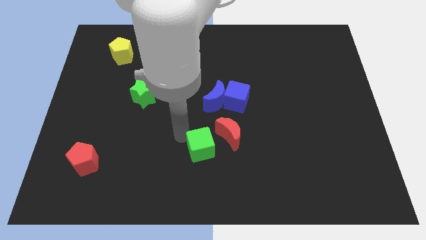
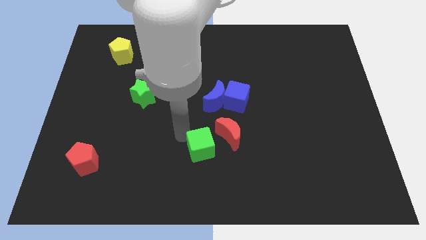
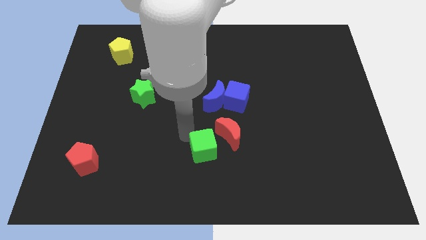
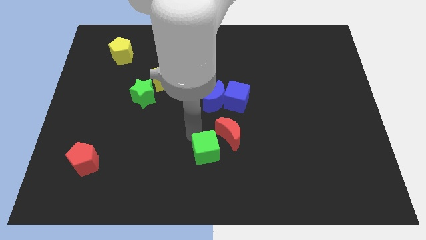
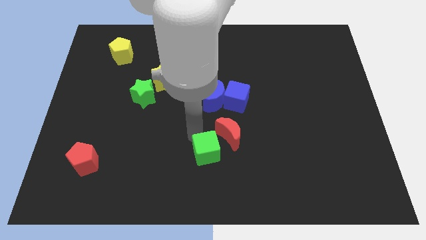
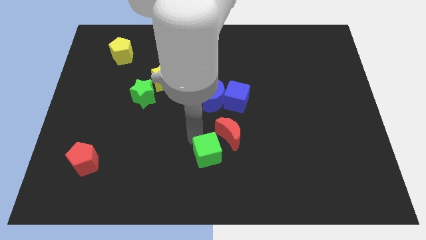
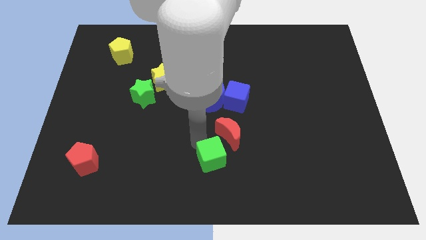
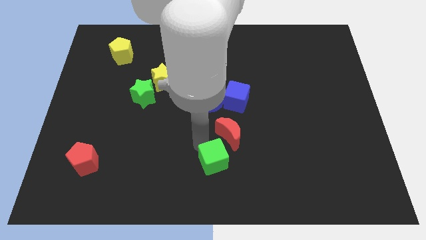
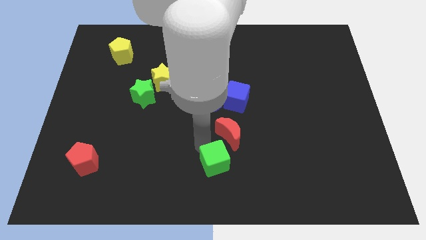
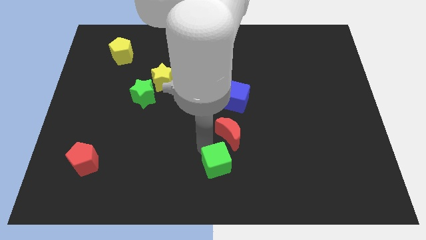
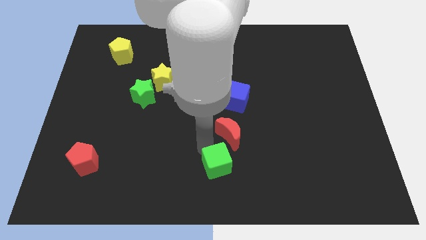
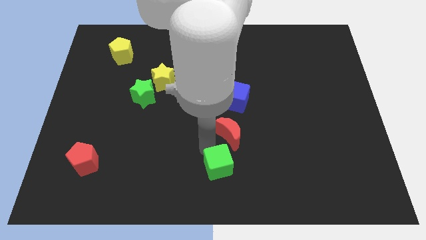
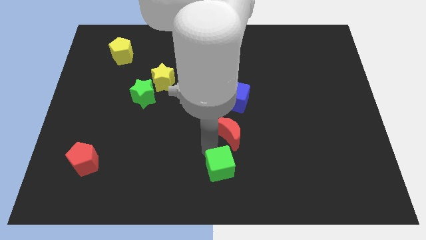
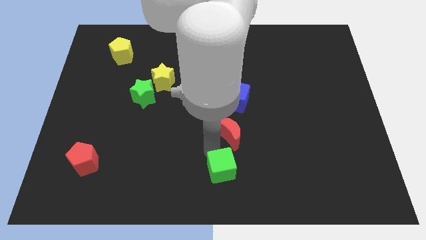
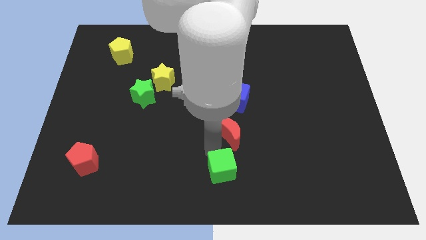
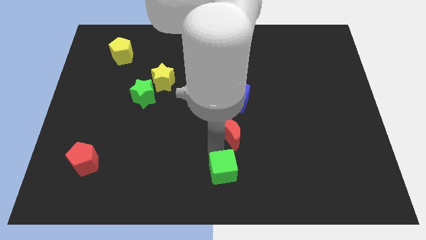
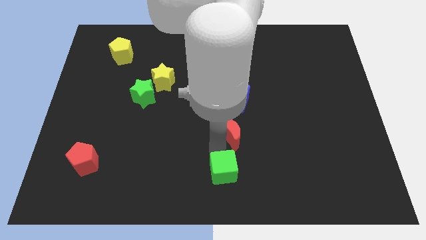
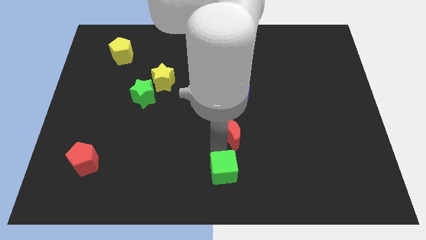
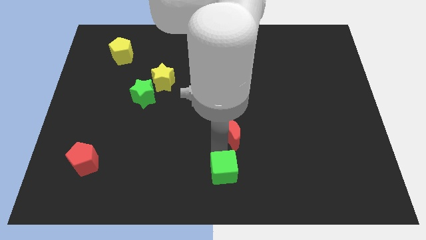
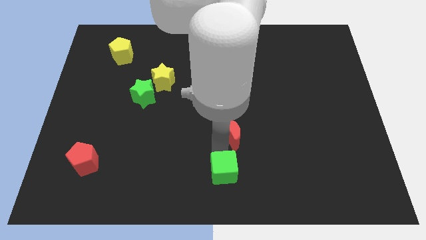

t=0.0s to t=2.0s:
move the green cube to the bottom side of the red moon

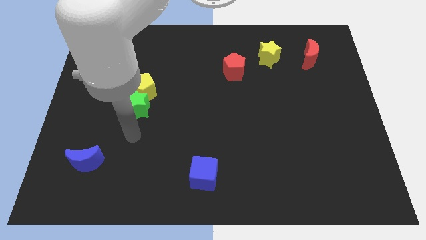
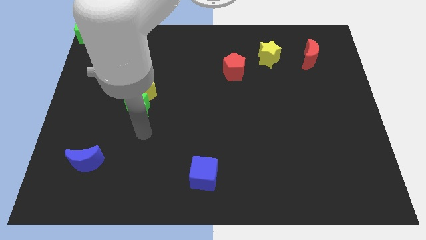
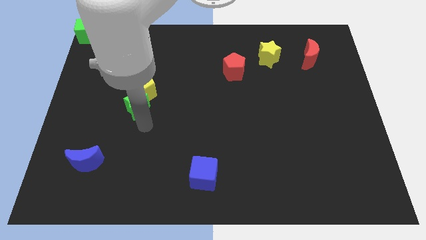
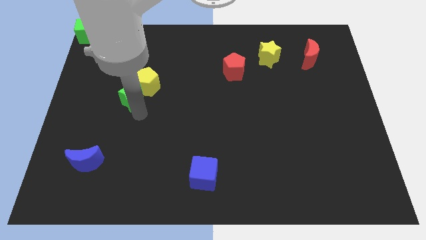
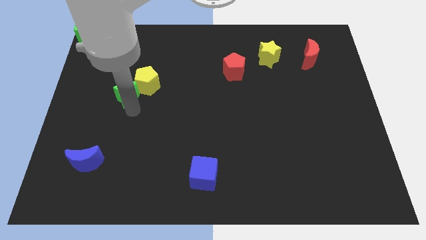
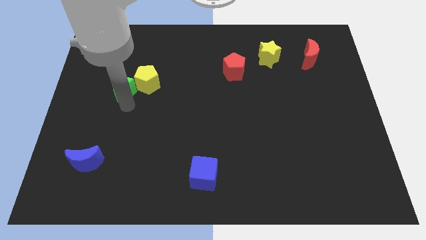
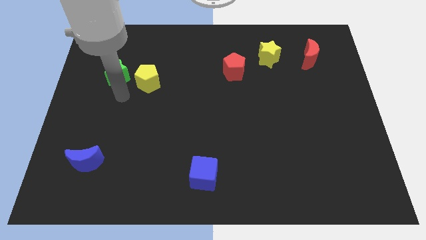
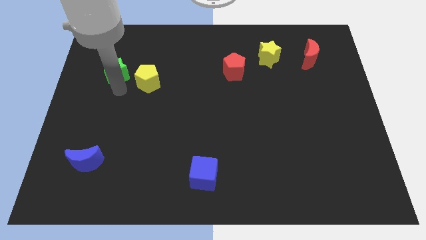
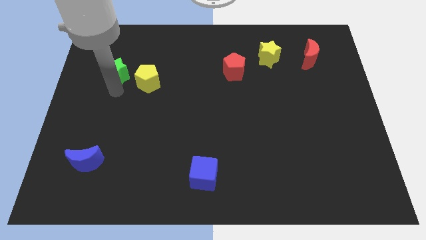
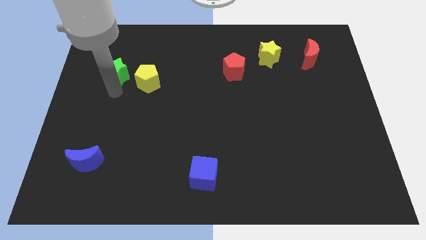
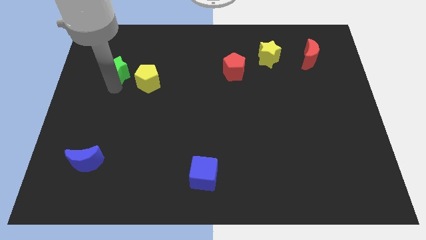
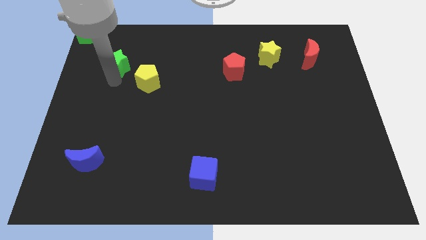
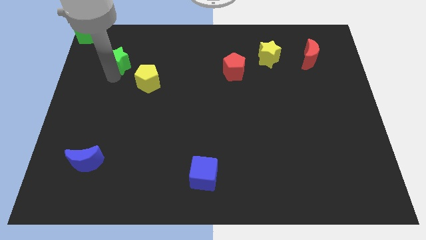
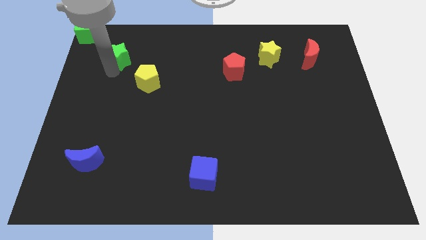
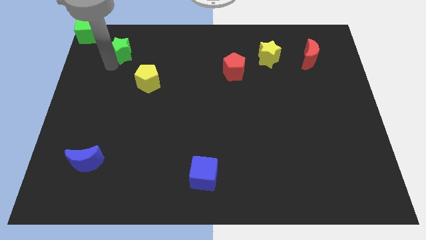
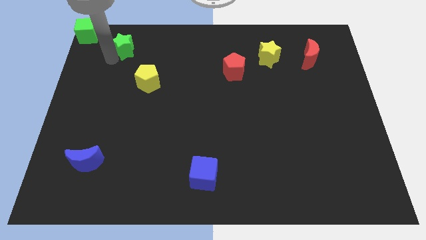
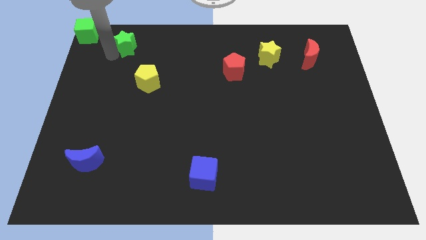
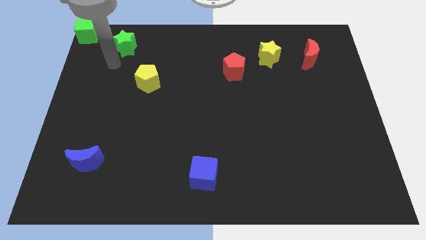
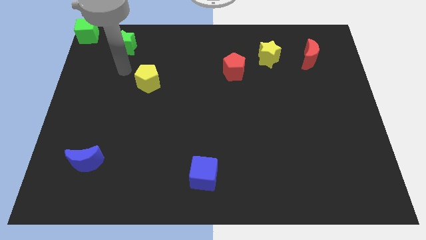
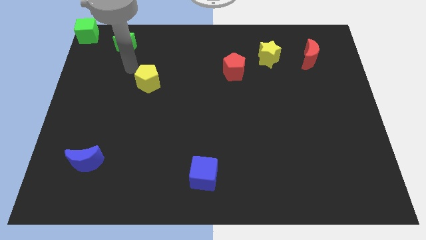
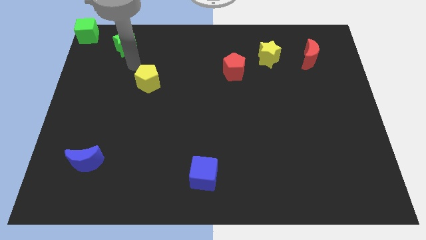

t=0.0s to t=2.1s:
separate green star and yellow pentagon

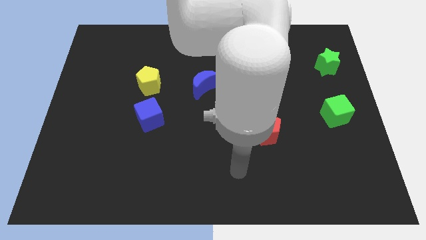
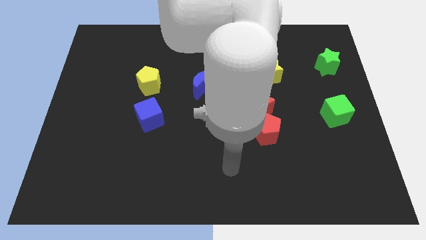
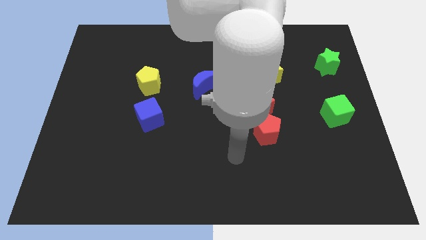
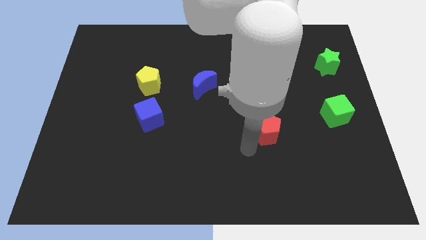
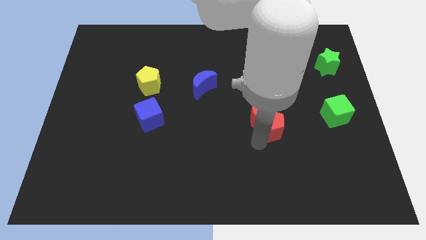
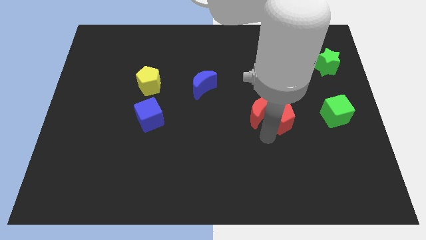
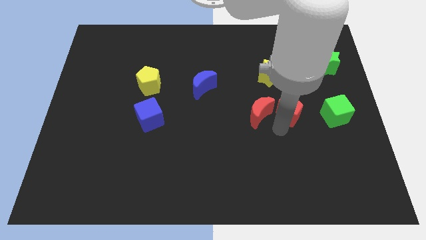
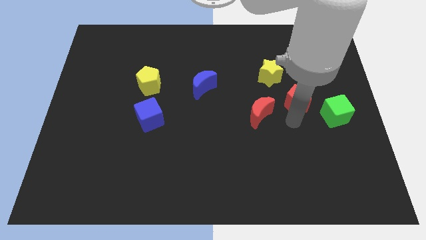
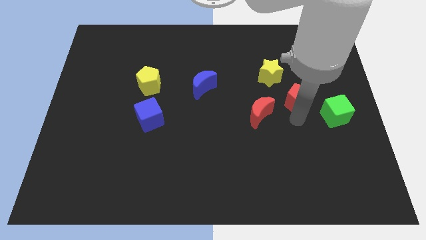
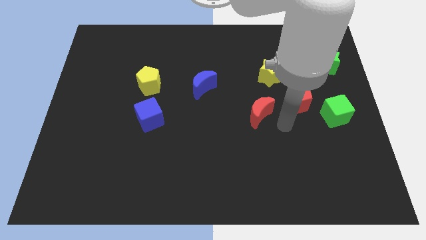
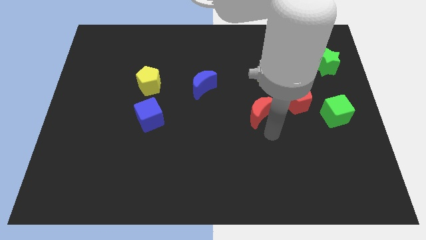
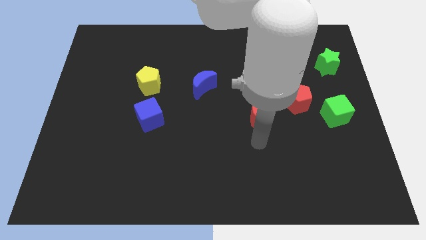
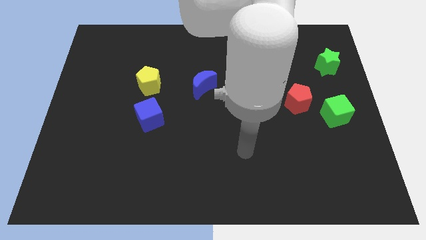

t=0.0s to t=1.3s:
place the red pentagon in between yellow star and green cube

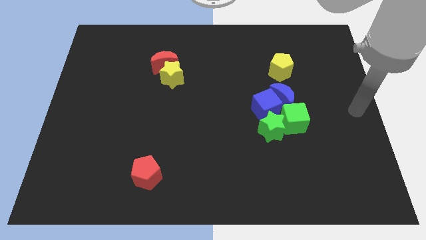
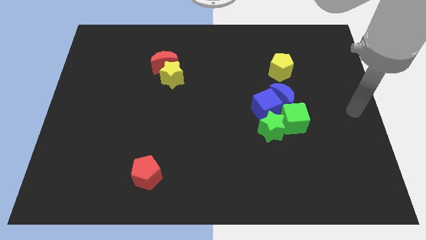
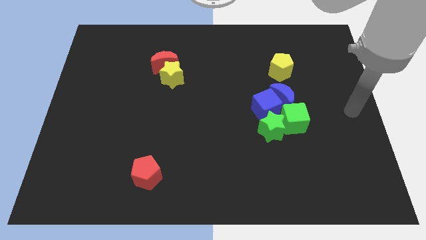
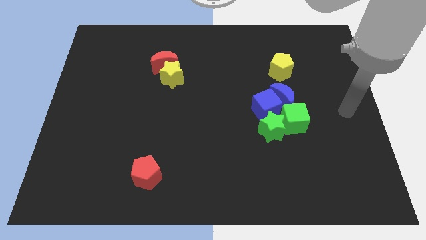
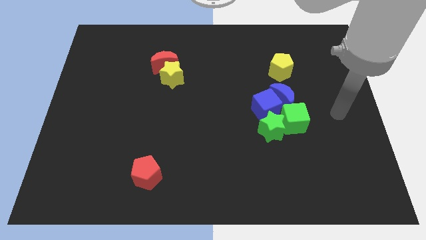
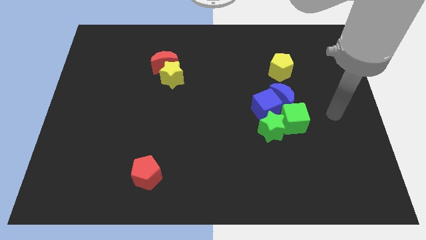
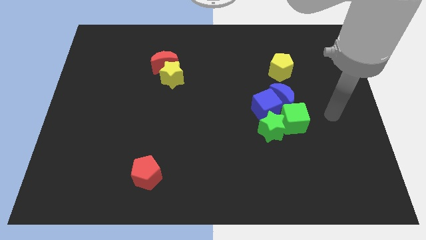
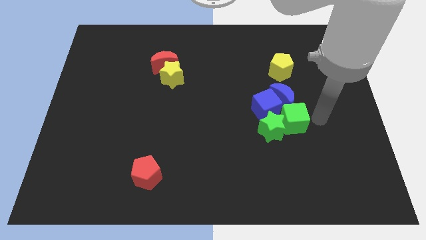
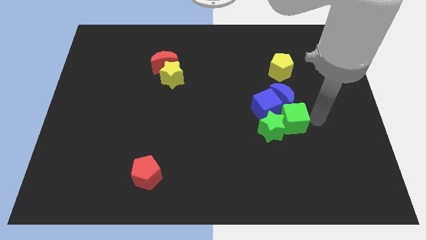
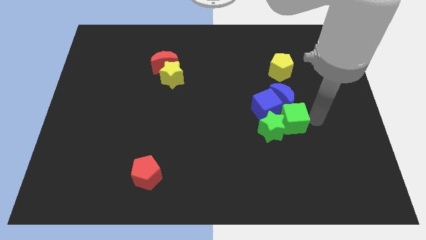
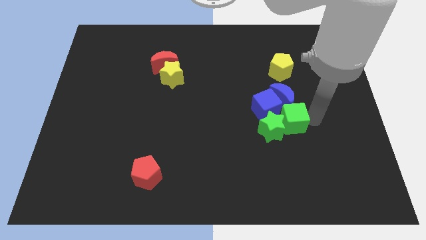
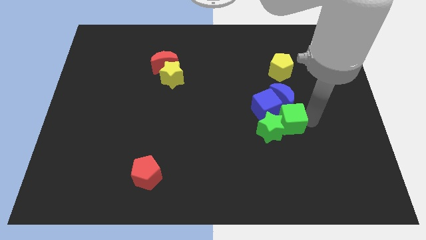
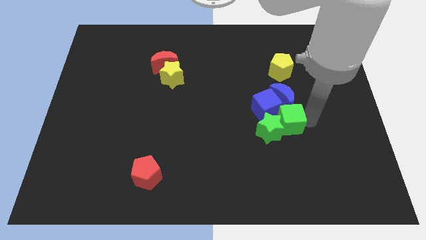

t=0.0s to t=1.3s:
tap the right side of the green cube

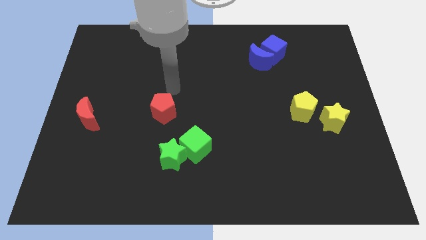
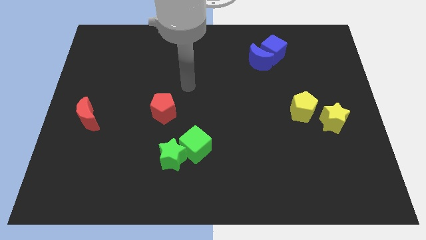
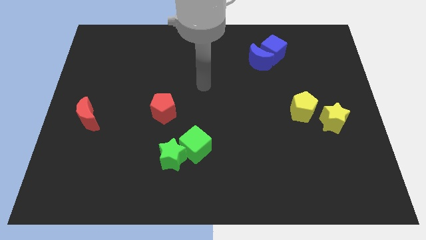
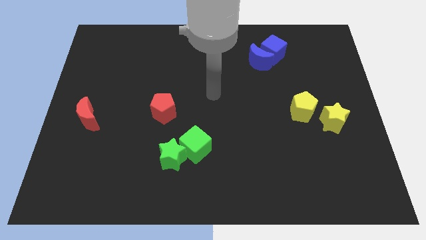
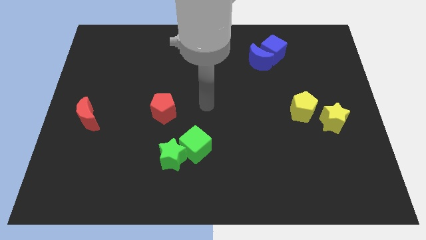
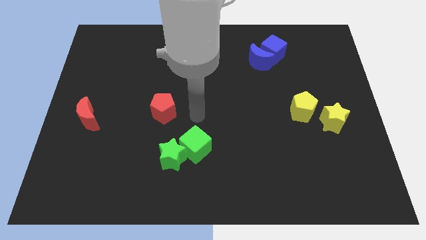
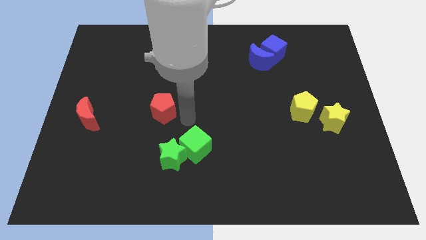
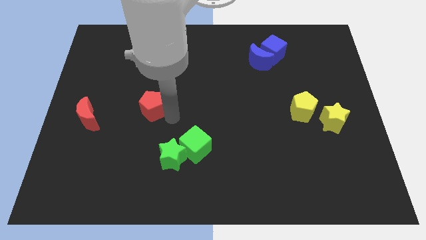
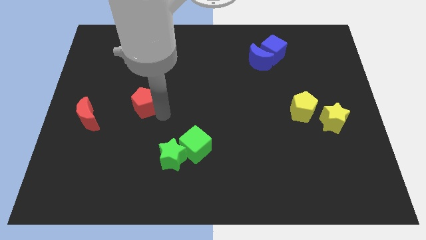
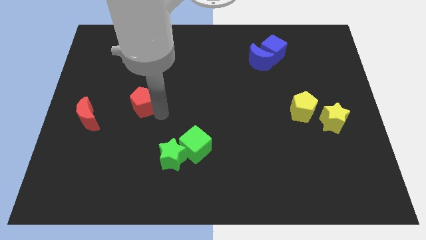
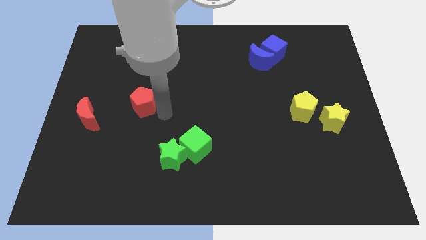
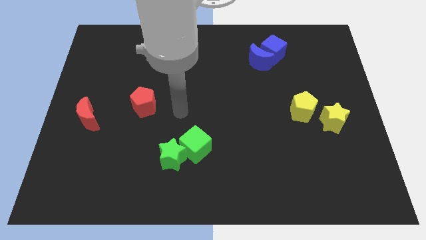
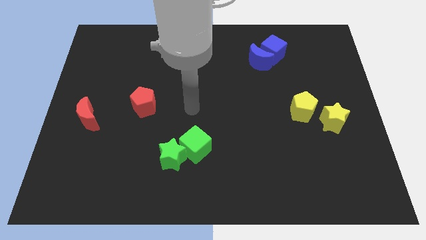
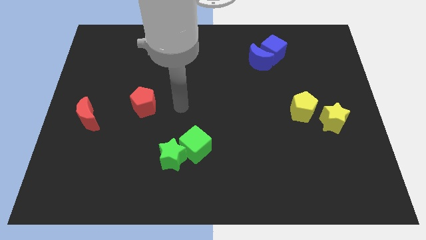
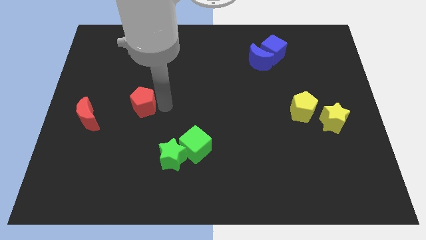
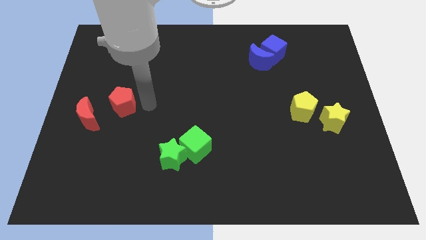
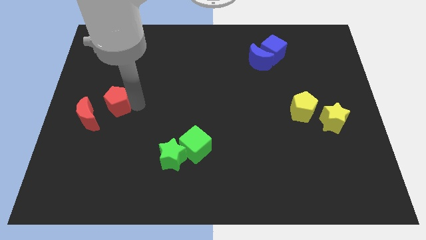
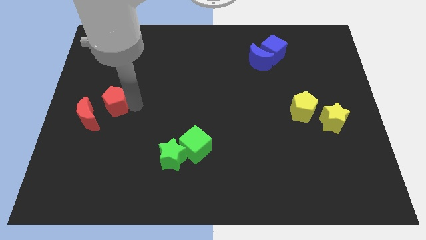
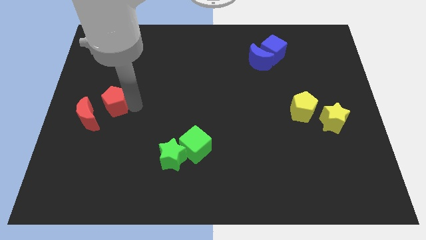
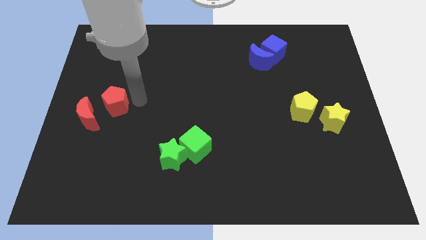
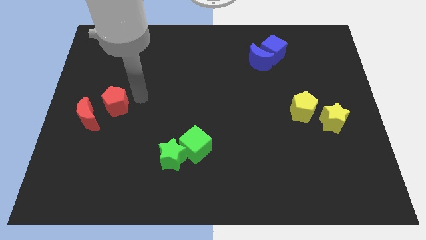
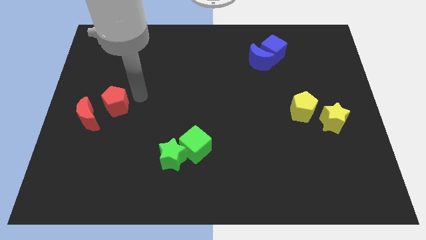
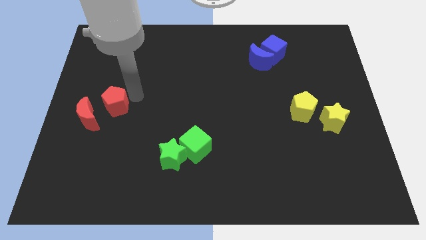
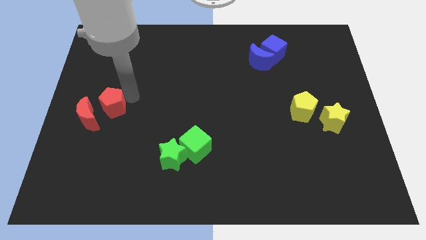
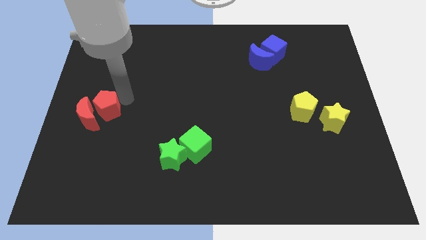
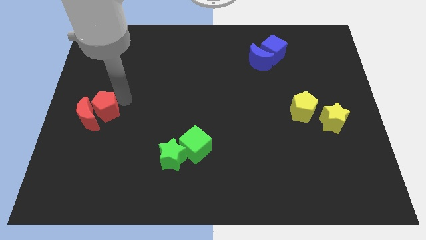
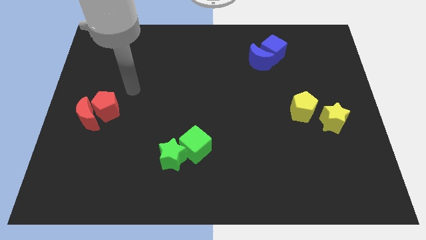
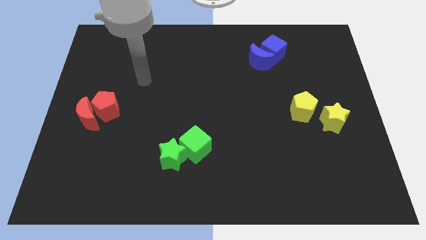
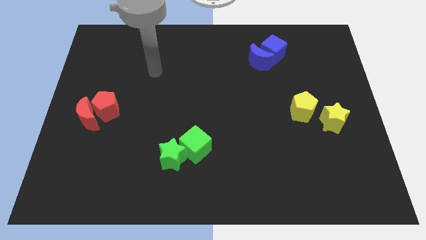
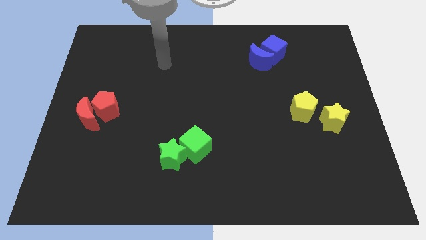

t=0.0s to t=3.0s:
move your arm away from the red pentagon
